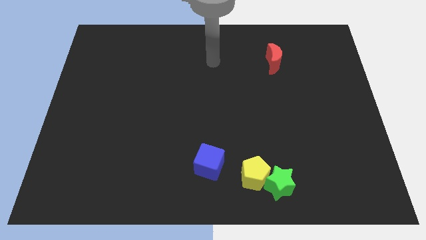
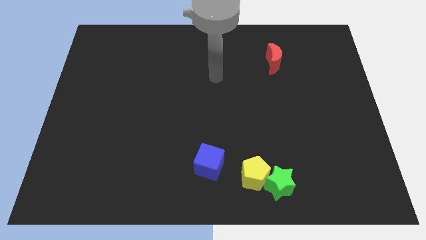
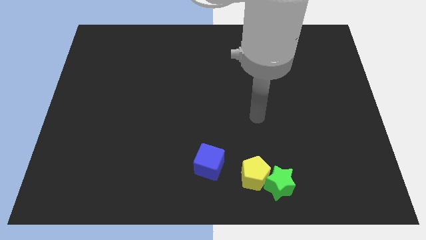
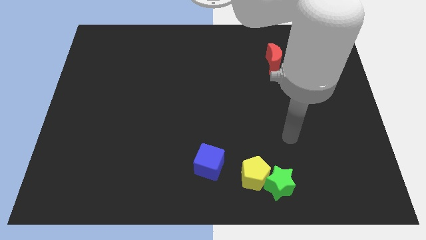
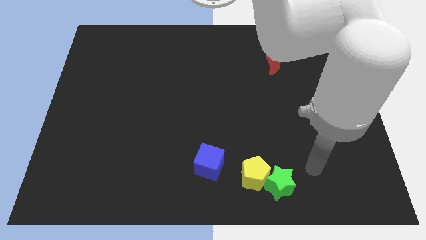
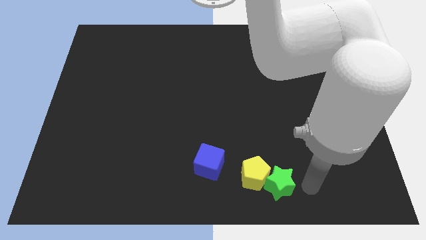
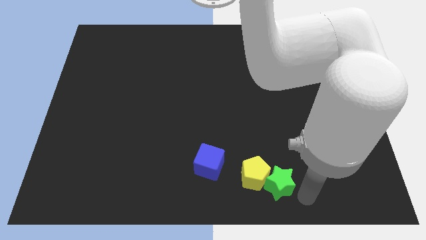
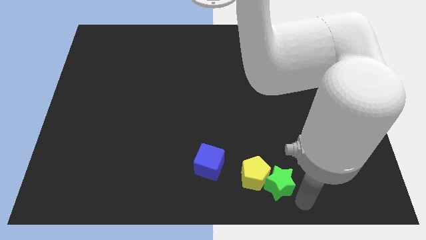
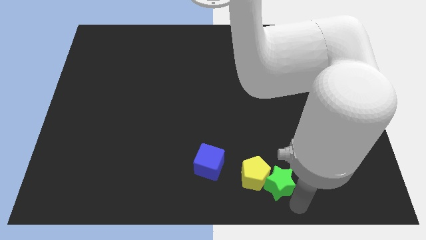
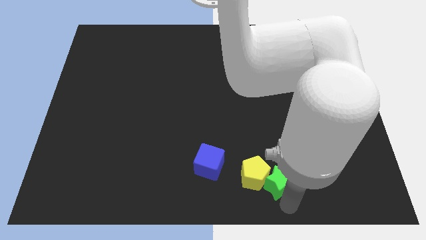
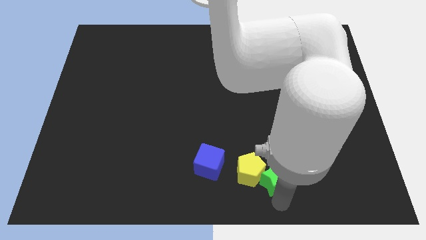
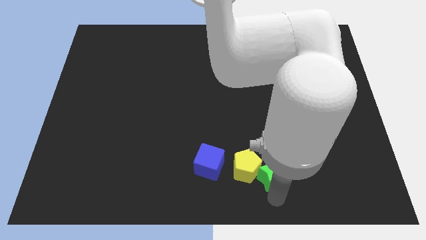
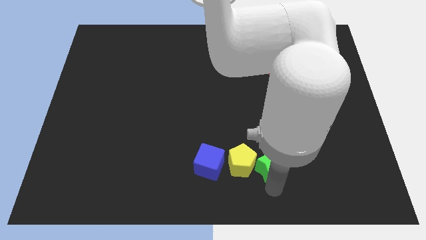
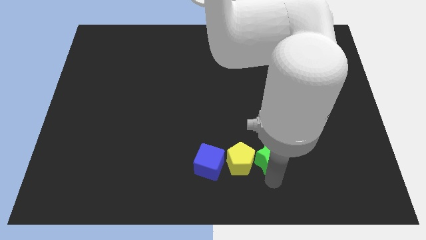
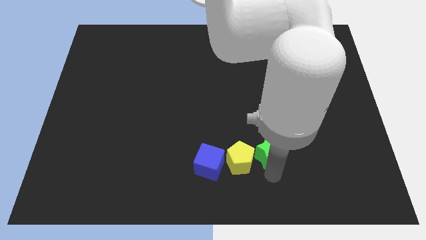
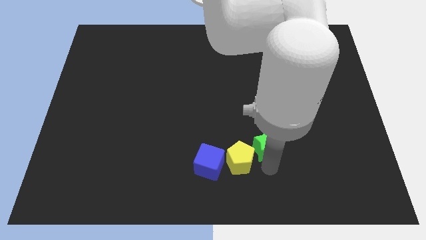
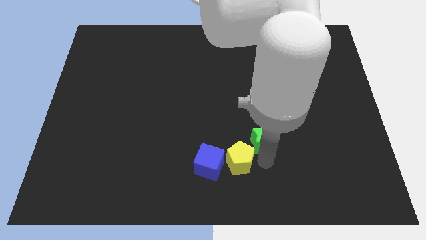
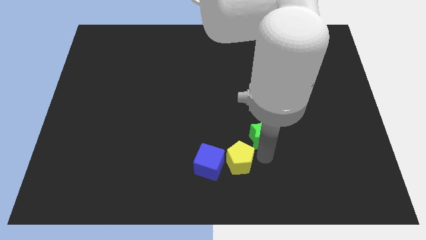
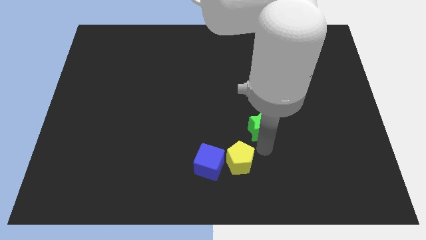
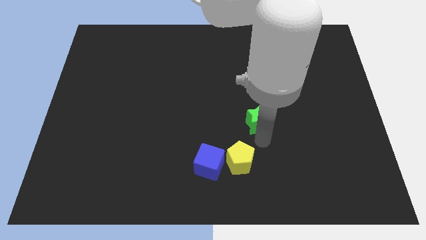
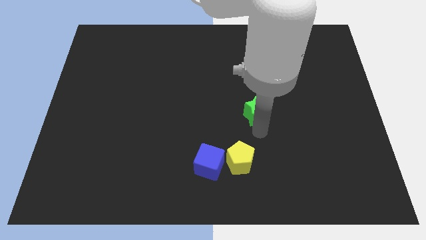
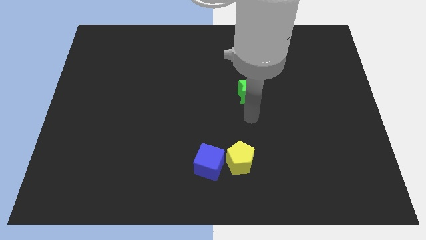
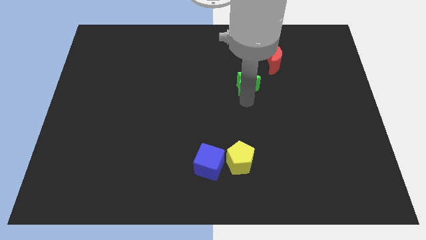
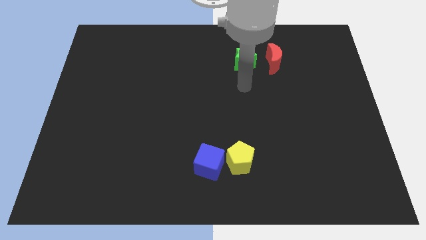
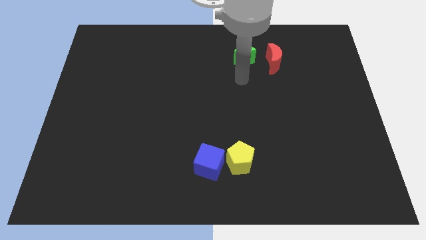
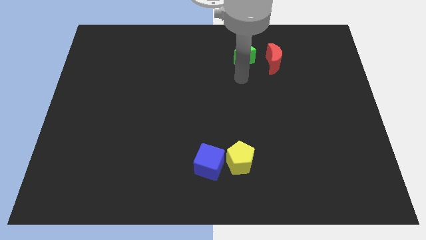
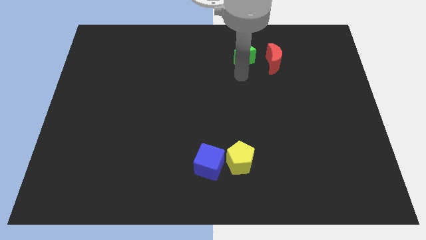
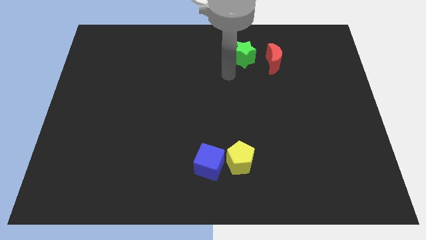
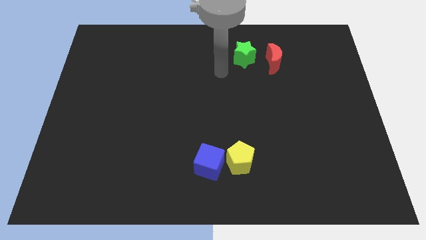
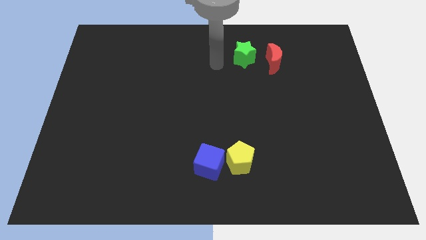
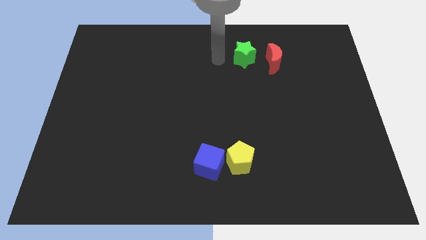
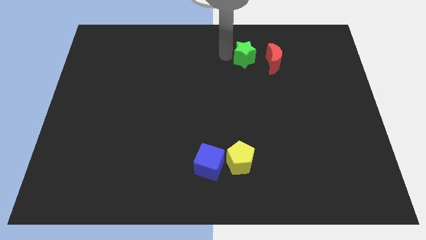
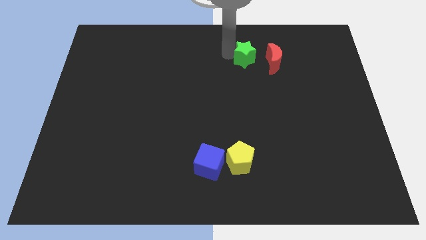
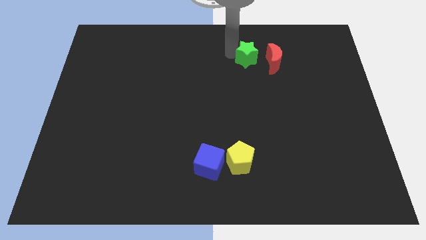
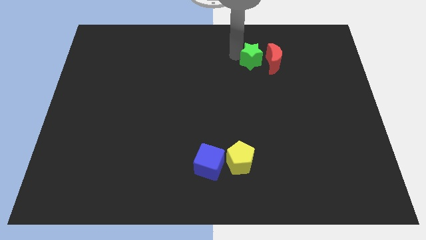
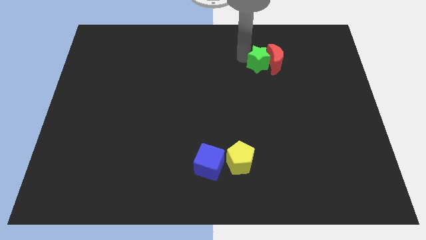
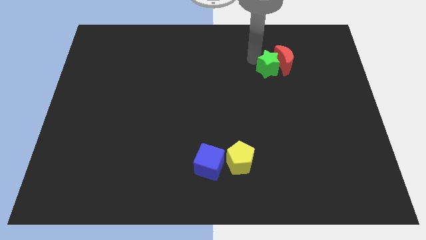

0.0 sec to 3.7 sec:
push the star close to the moon

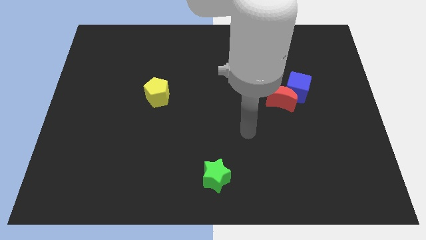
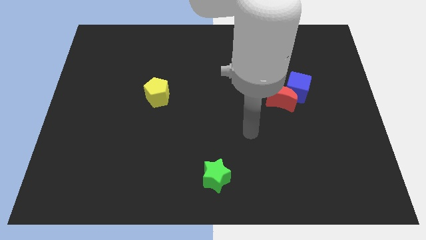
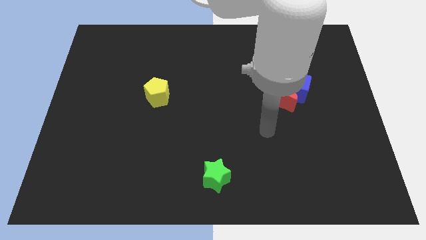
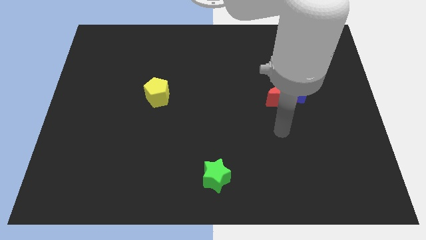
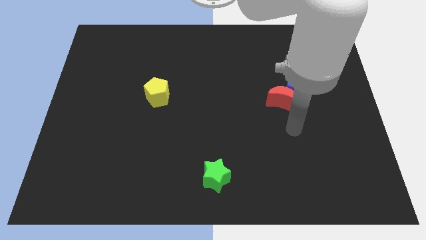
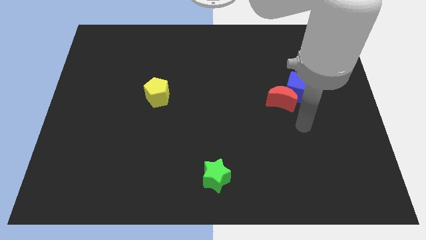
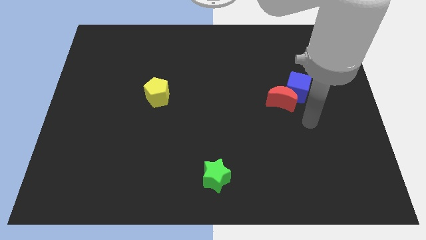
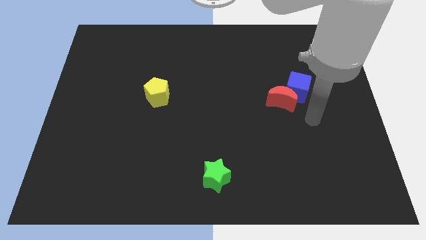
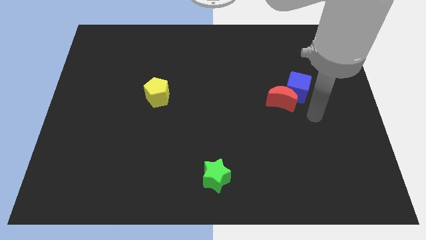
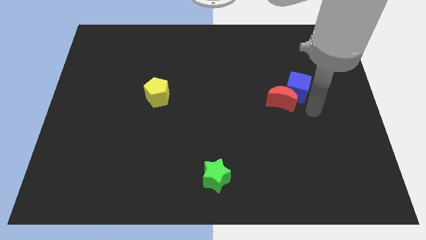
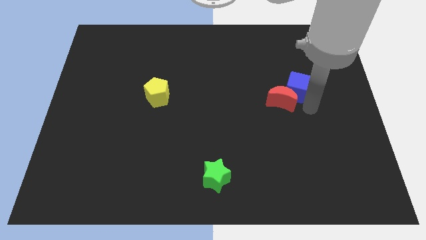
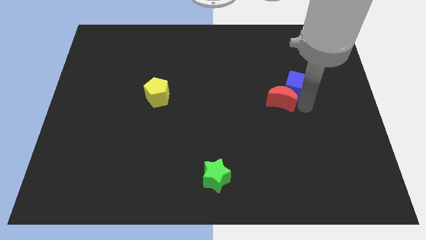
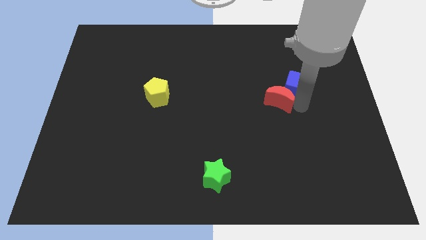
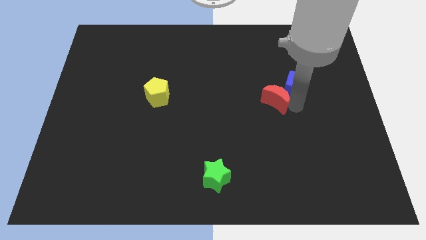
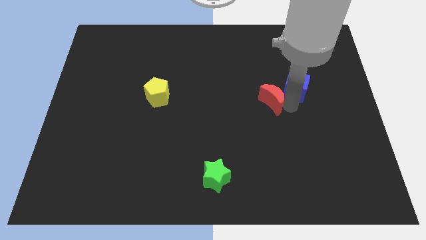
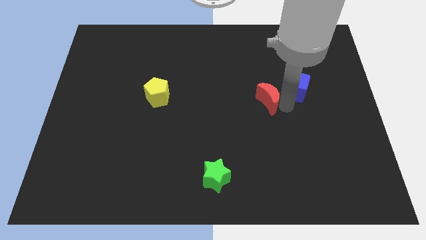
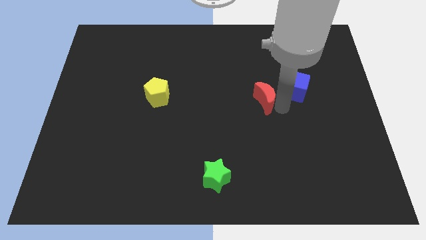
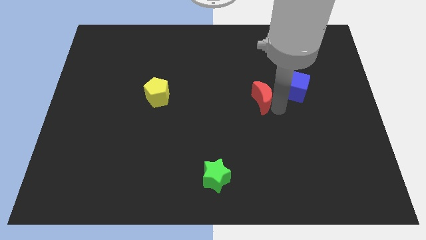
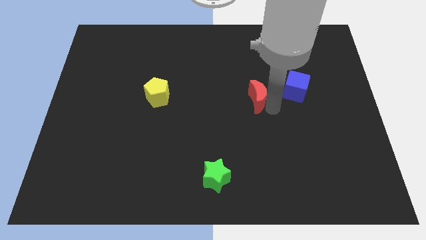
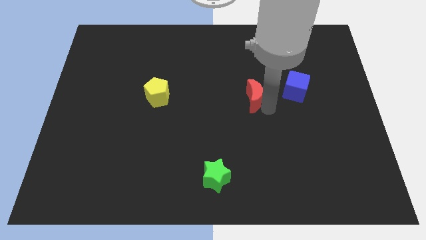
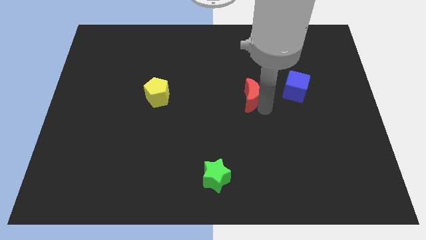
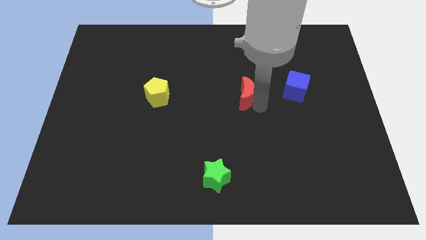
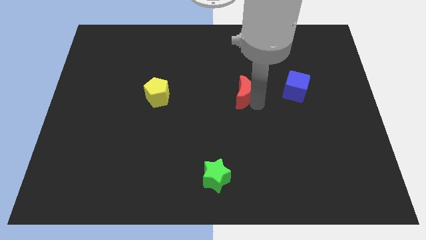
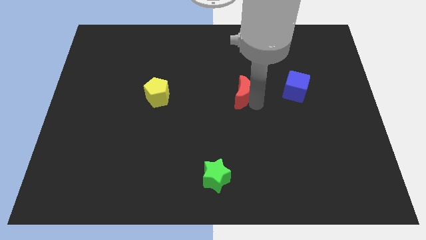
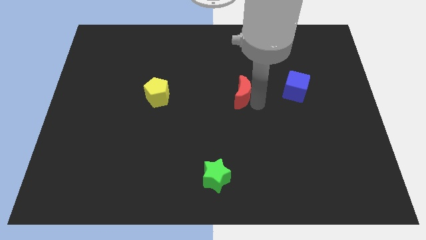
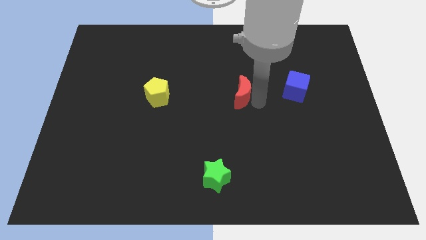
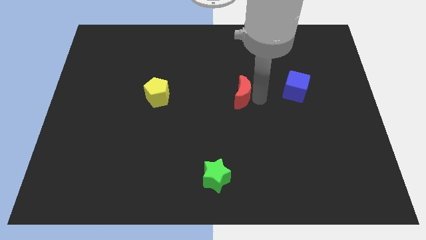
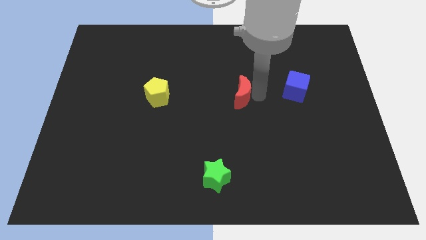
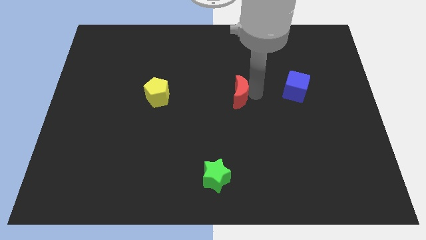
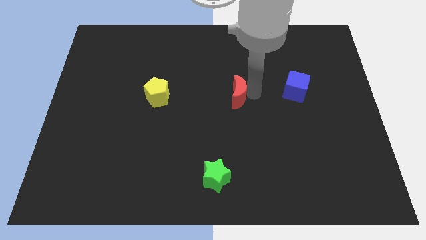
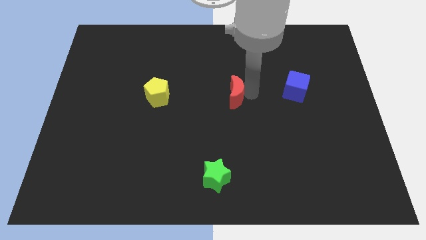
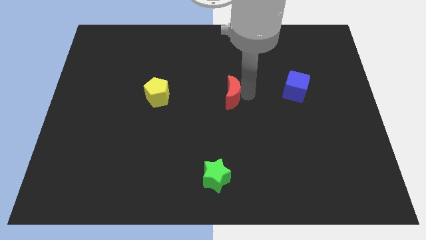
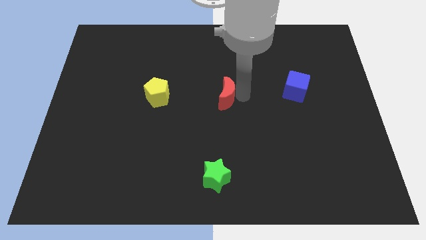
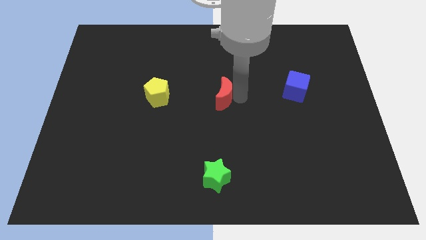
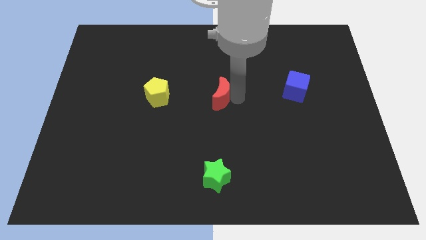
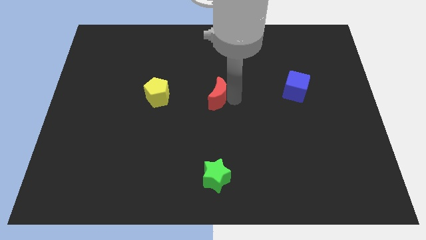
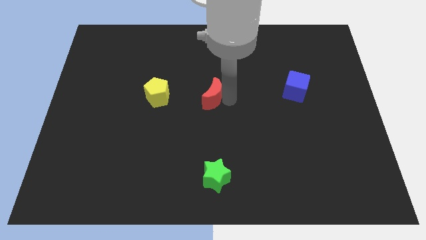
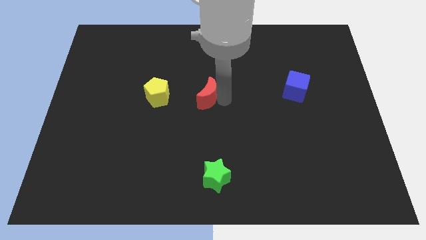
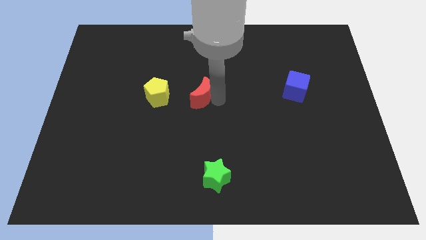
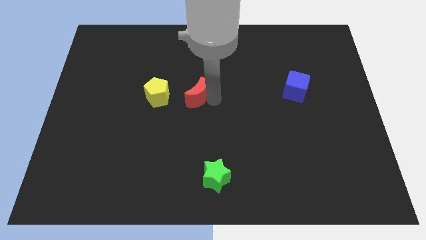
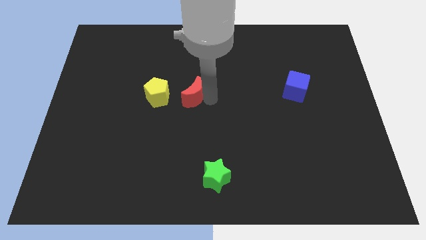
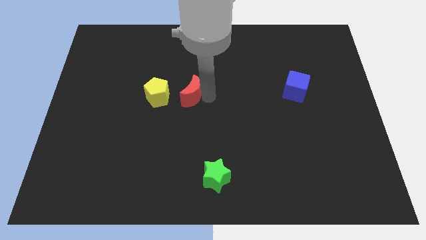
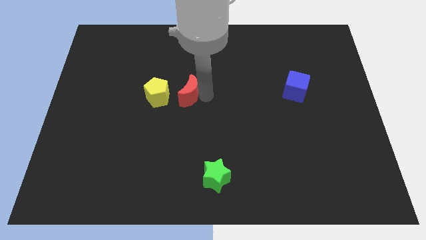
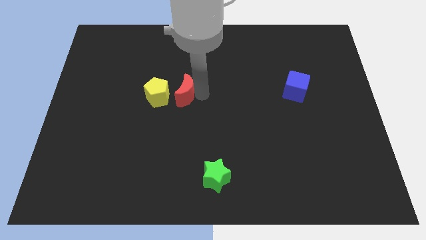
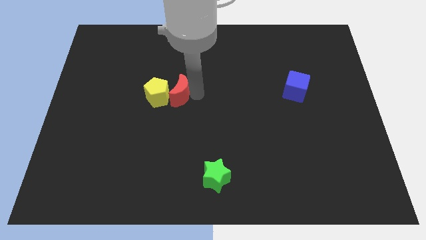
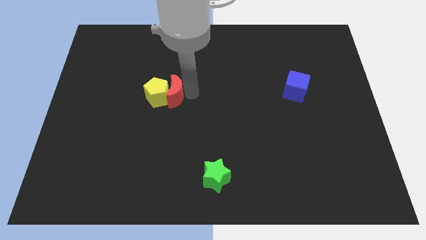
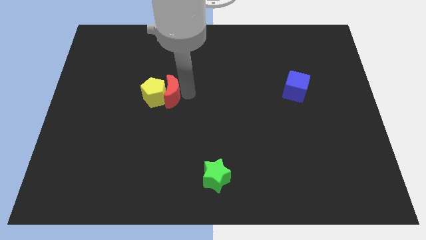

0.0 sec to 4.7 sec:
move the moon next to the yellow block
